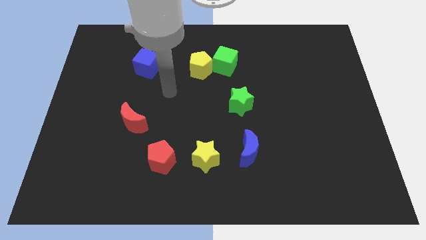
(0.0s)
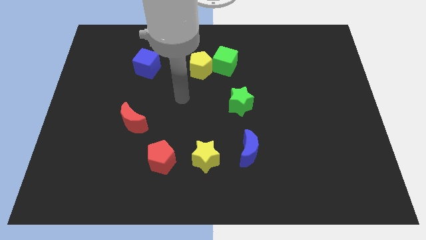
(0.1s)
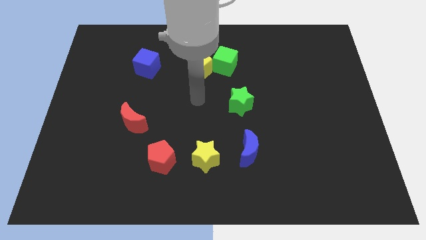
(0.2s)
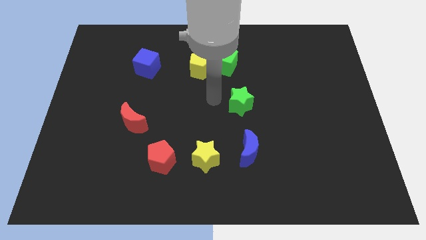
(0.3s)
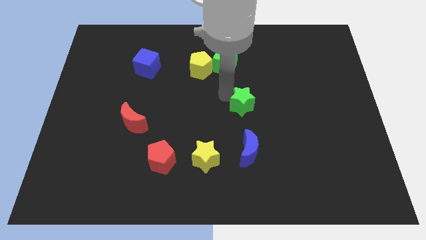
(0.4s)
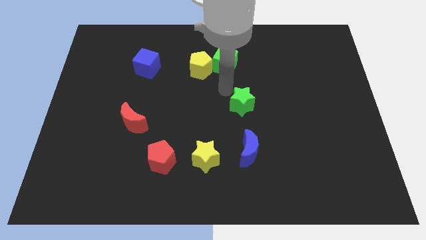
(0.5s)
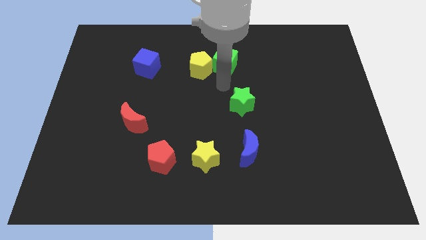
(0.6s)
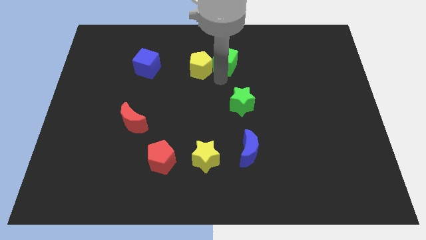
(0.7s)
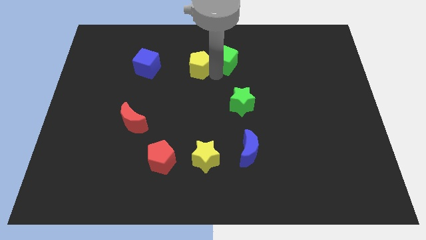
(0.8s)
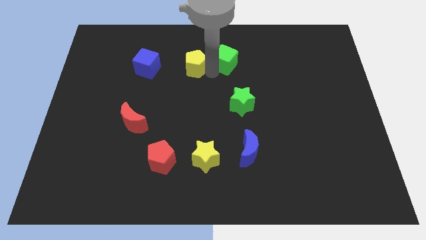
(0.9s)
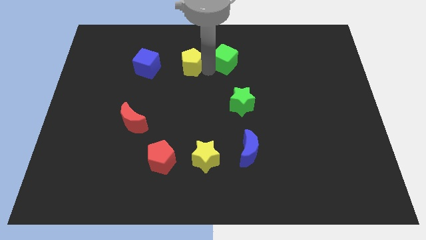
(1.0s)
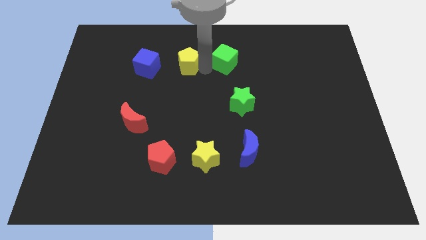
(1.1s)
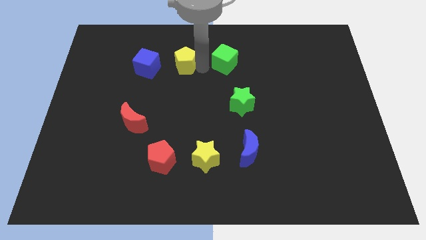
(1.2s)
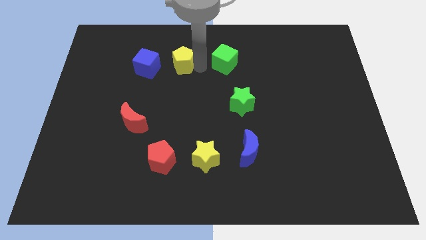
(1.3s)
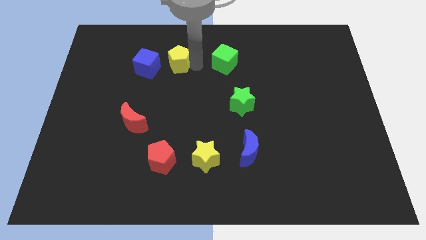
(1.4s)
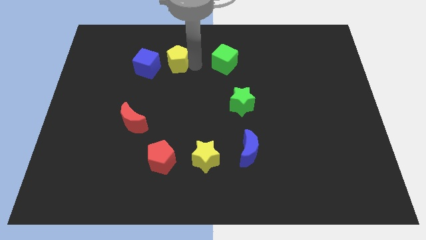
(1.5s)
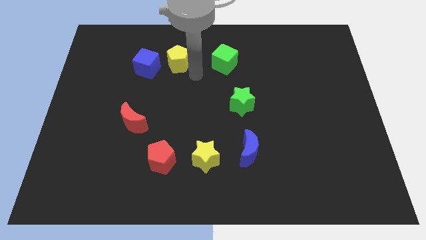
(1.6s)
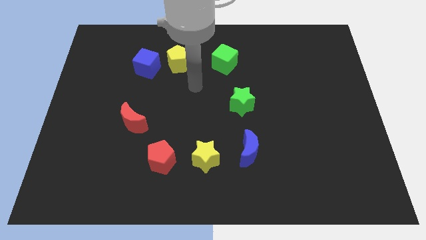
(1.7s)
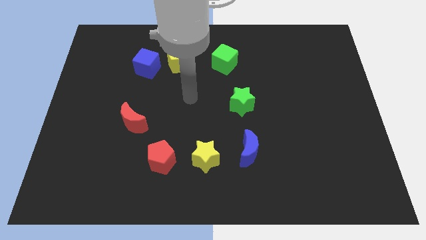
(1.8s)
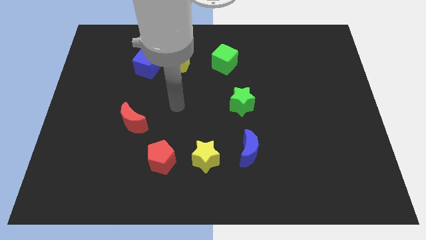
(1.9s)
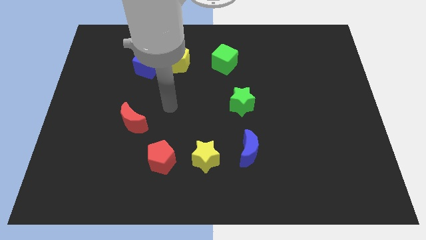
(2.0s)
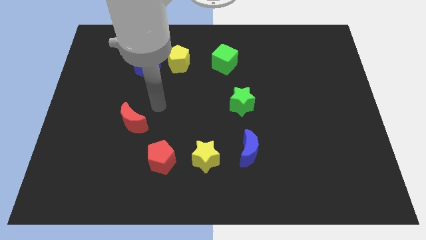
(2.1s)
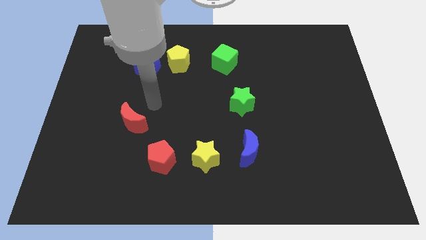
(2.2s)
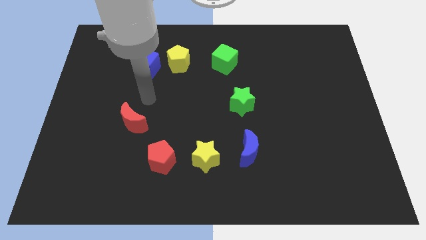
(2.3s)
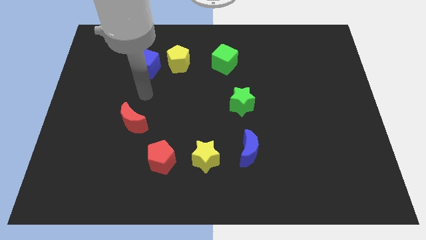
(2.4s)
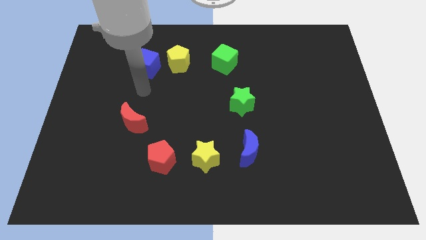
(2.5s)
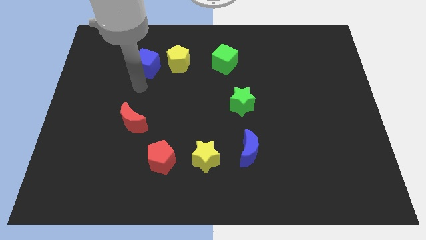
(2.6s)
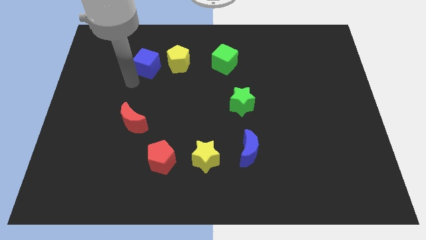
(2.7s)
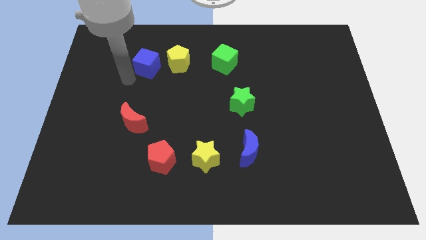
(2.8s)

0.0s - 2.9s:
separate the yellow pentagon from the green cube

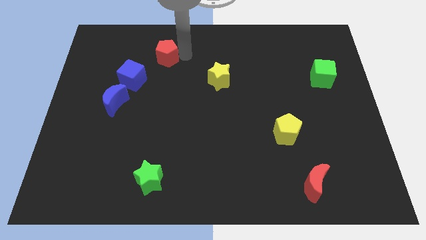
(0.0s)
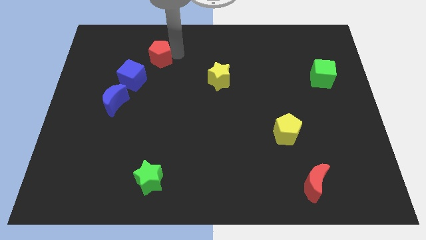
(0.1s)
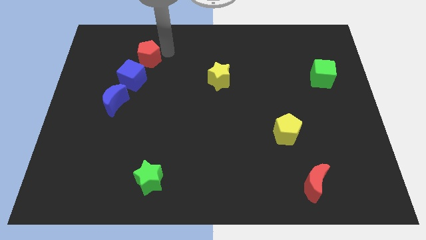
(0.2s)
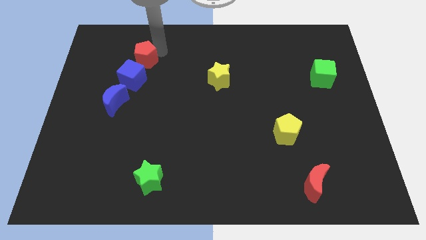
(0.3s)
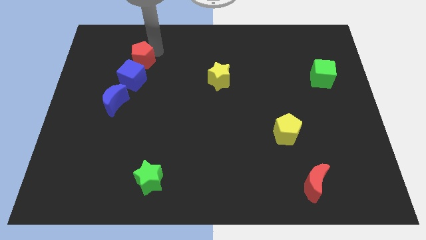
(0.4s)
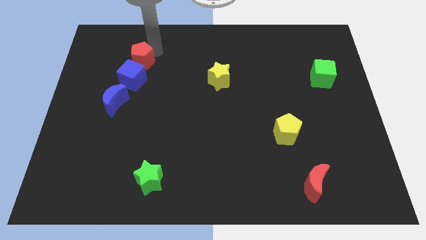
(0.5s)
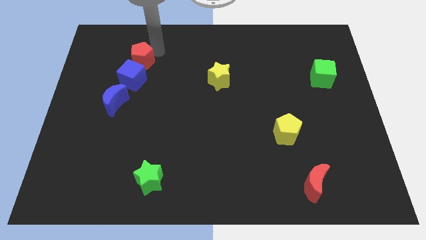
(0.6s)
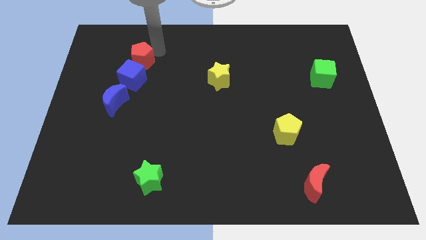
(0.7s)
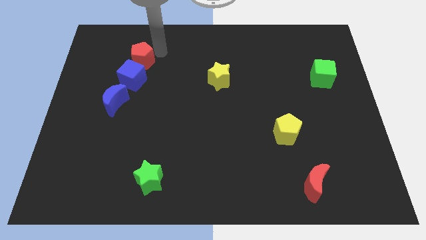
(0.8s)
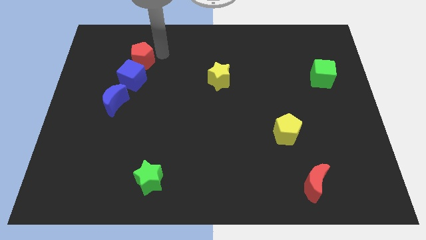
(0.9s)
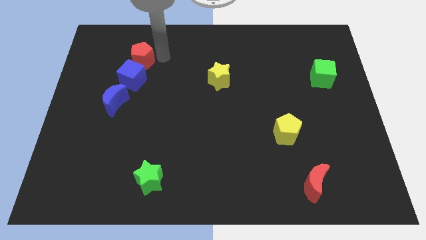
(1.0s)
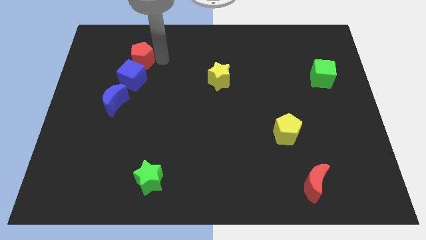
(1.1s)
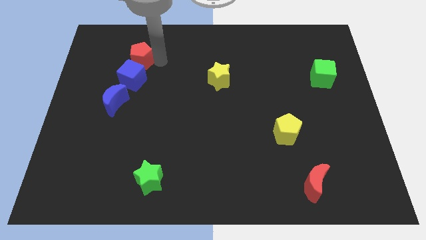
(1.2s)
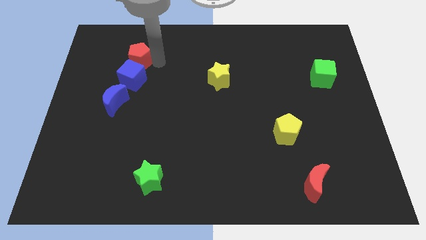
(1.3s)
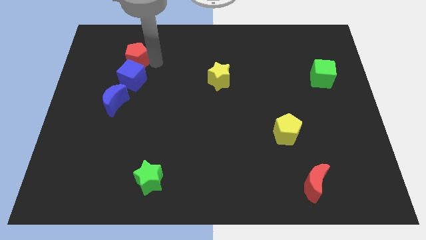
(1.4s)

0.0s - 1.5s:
put the red pentagon above the blue cube

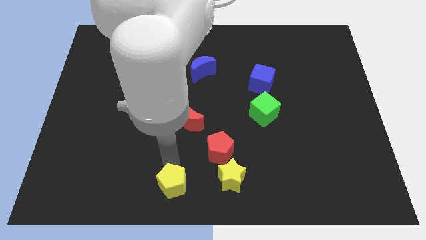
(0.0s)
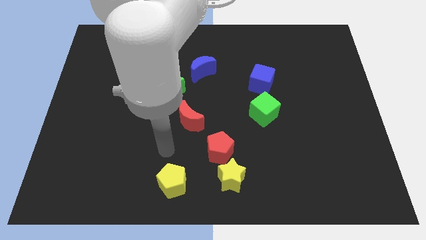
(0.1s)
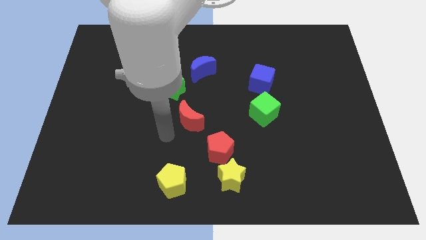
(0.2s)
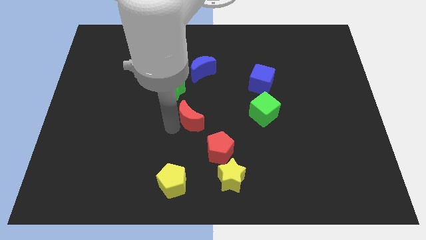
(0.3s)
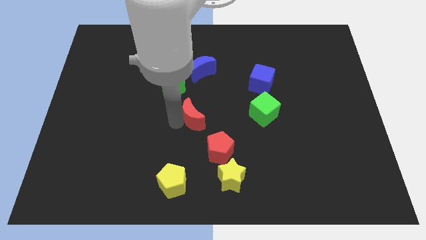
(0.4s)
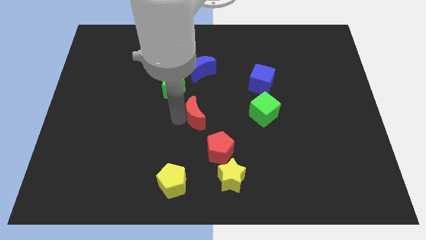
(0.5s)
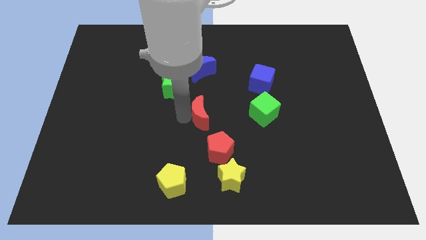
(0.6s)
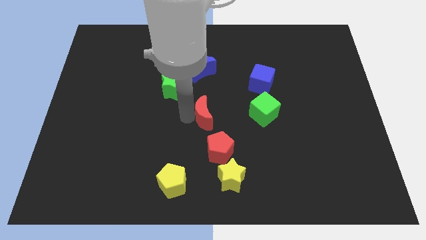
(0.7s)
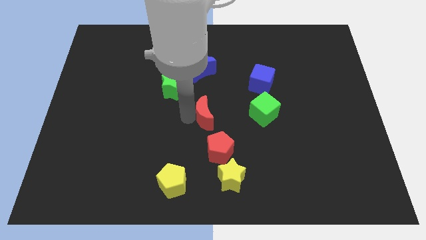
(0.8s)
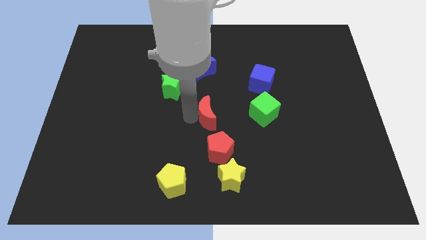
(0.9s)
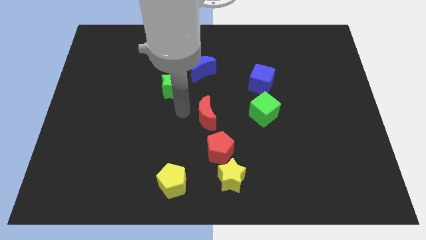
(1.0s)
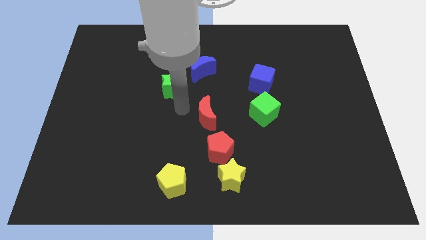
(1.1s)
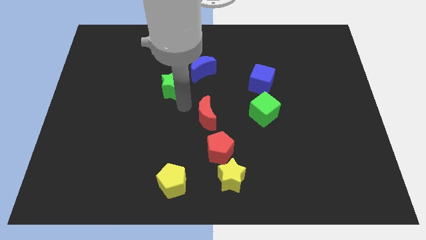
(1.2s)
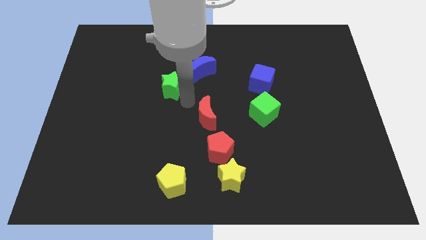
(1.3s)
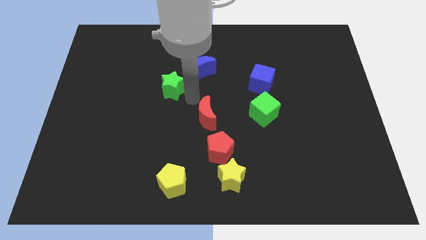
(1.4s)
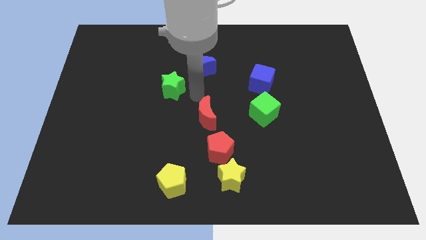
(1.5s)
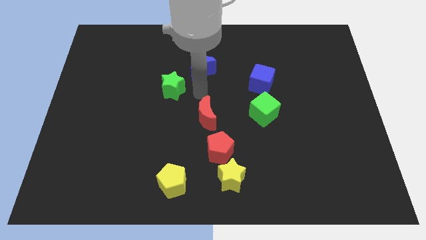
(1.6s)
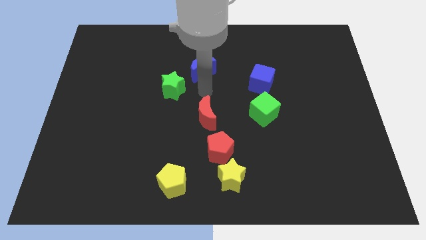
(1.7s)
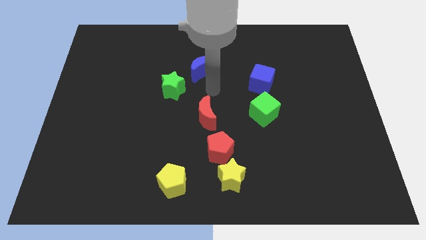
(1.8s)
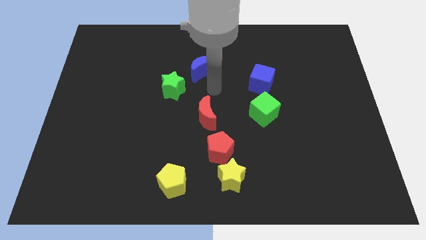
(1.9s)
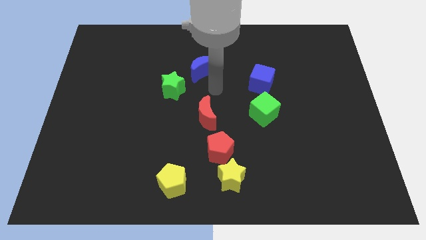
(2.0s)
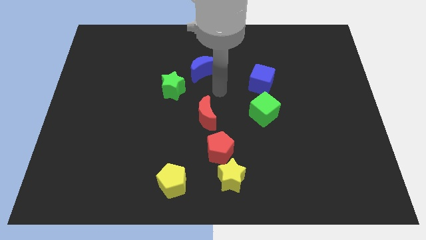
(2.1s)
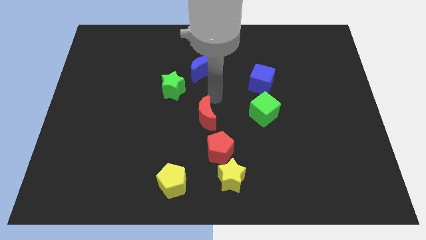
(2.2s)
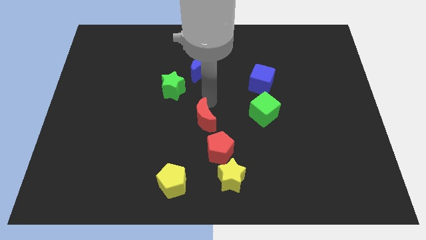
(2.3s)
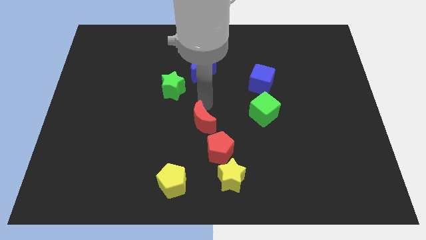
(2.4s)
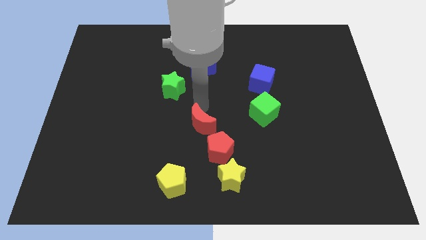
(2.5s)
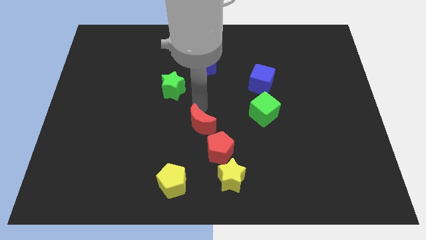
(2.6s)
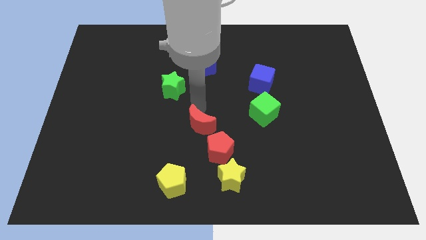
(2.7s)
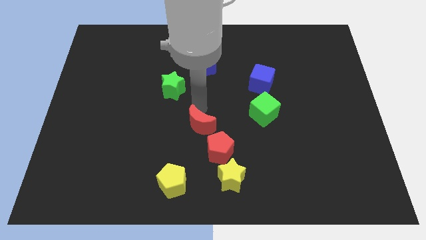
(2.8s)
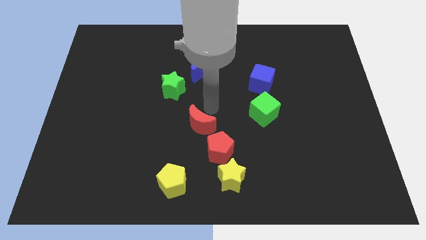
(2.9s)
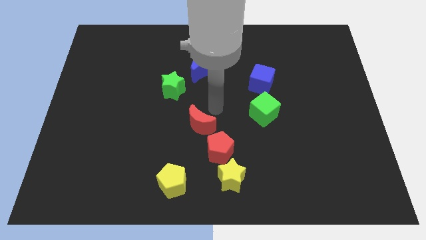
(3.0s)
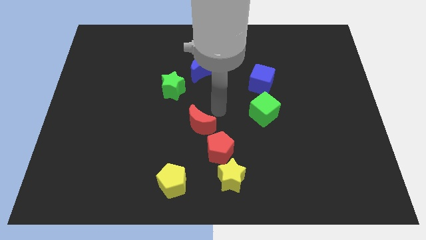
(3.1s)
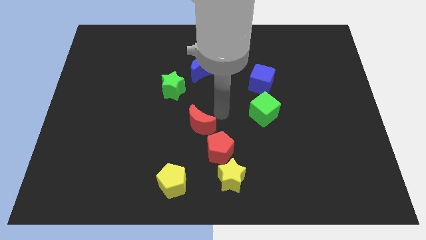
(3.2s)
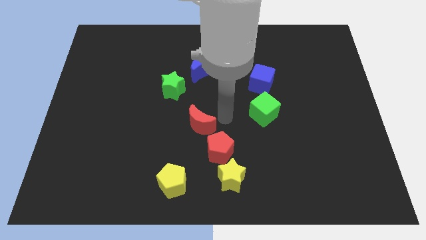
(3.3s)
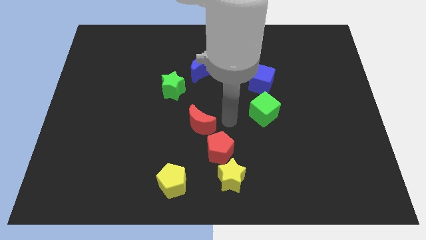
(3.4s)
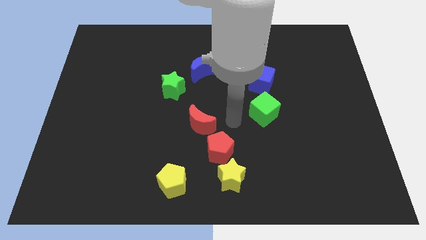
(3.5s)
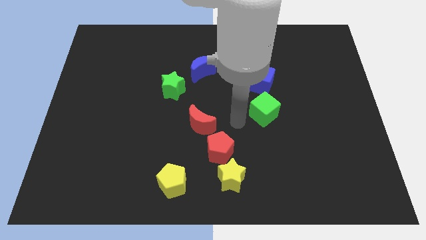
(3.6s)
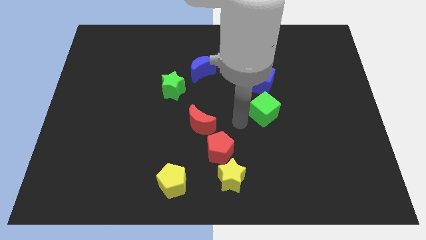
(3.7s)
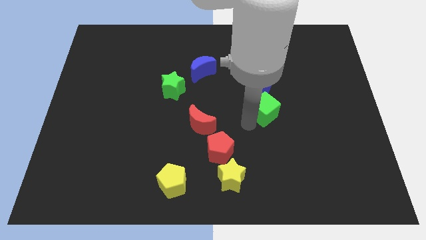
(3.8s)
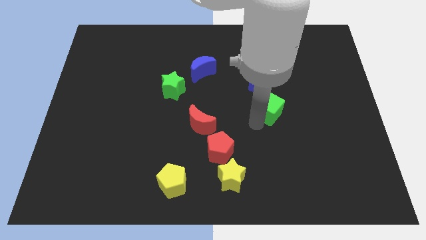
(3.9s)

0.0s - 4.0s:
push red crescent slightly to the top left of red pentagon

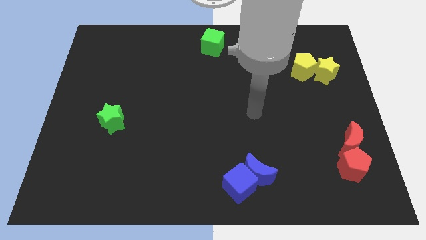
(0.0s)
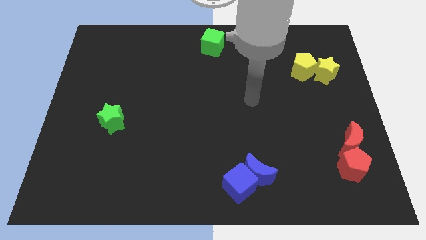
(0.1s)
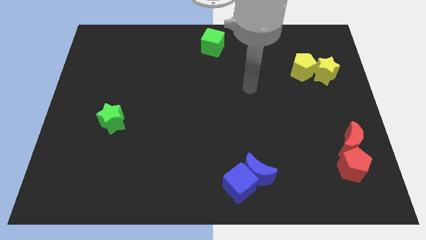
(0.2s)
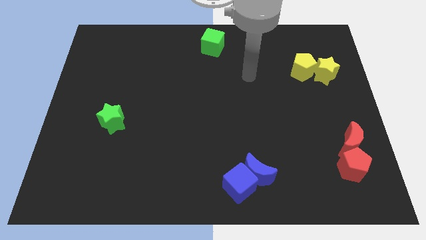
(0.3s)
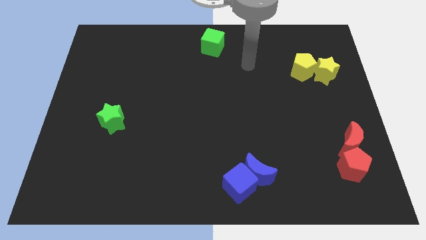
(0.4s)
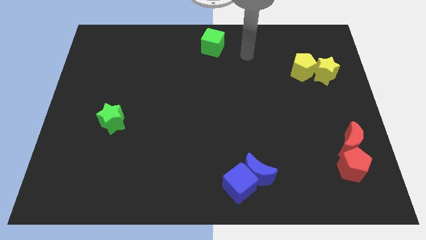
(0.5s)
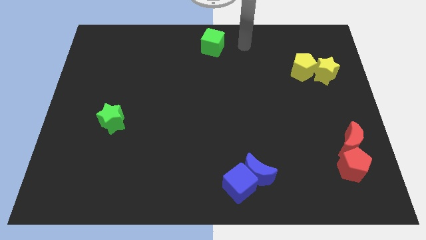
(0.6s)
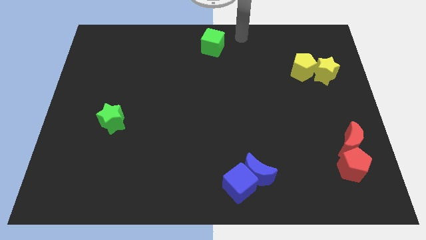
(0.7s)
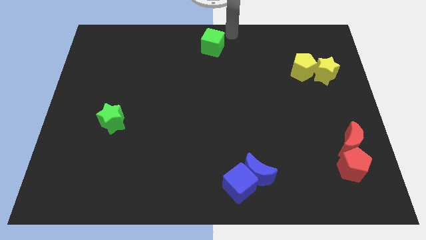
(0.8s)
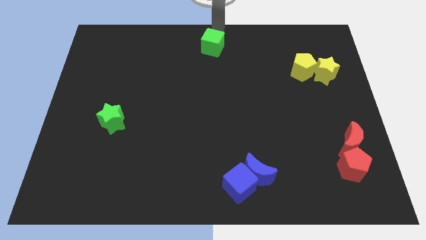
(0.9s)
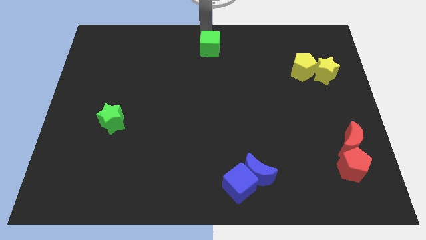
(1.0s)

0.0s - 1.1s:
place the arm to the top of the green cube
